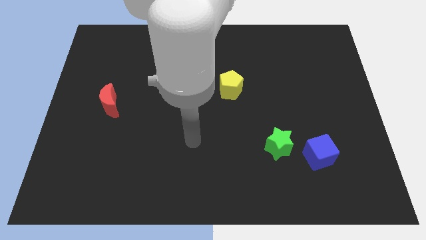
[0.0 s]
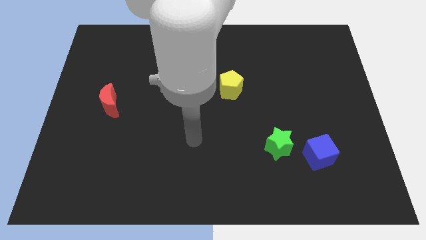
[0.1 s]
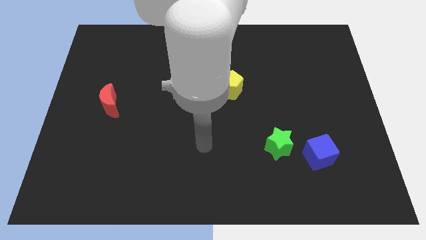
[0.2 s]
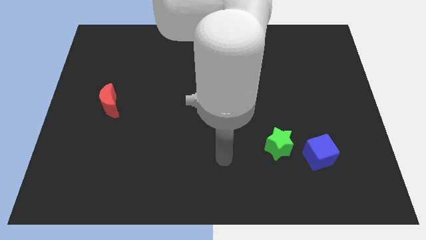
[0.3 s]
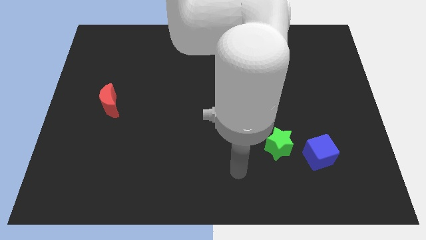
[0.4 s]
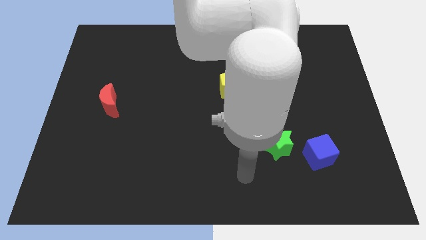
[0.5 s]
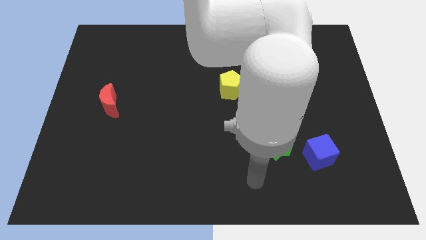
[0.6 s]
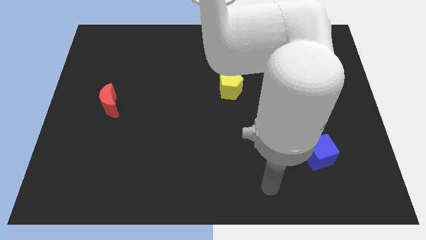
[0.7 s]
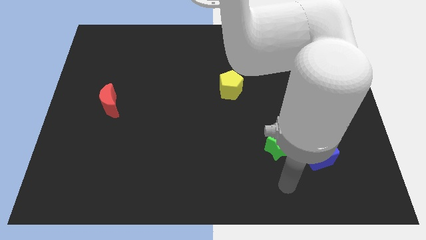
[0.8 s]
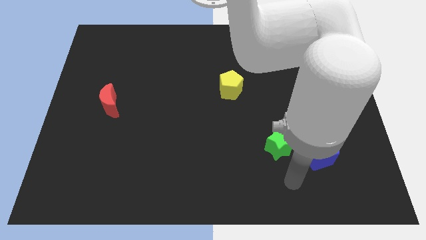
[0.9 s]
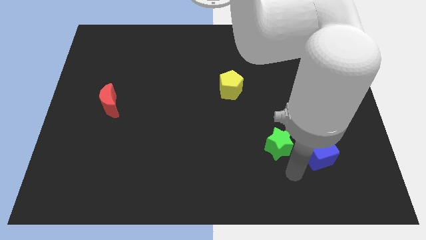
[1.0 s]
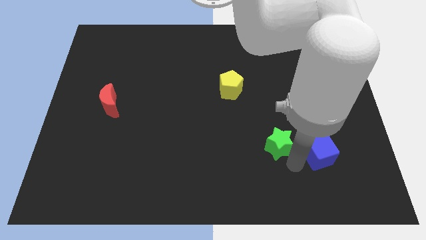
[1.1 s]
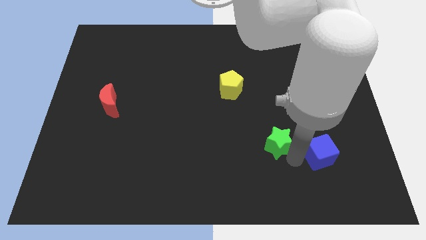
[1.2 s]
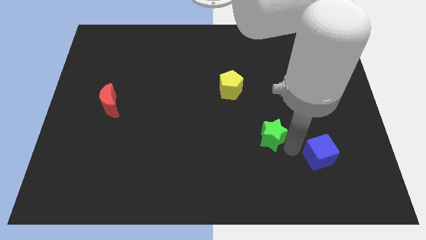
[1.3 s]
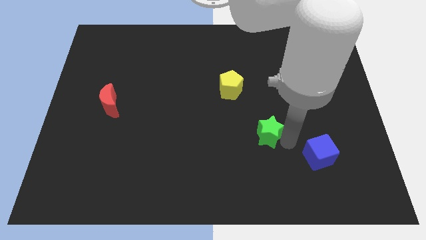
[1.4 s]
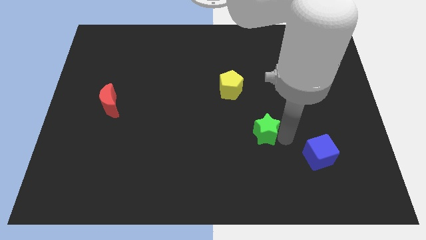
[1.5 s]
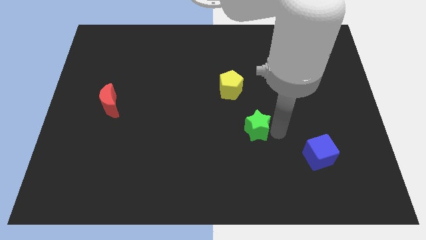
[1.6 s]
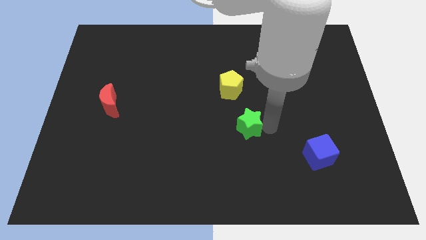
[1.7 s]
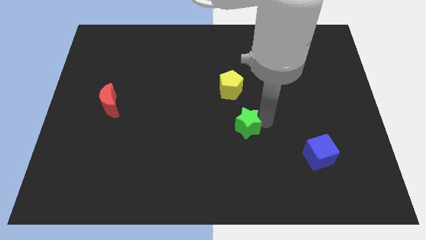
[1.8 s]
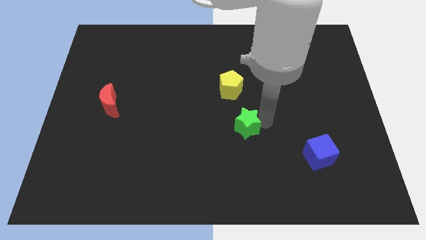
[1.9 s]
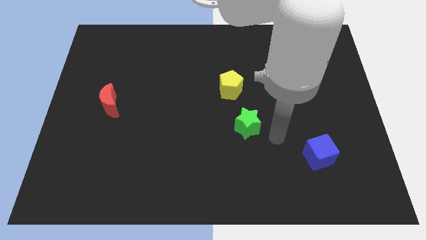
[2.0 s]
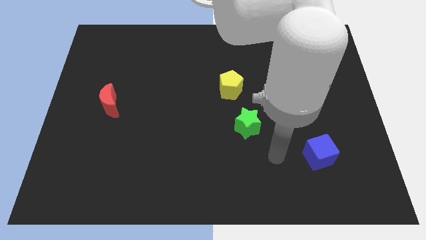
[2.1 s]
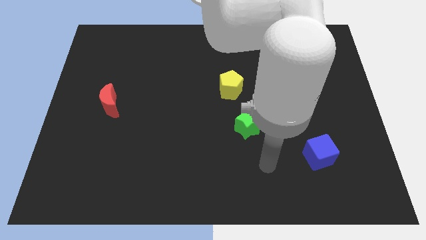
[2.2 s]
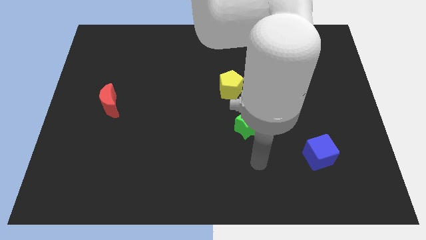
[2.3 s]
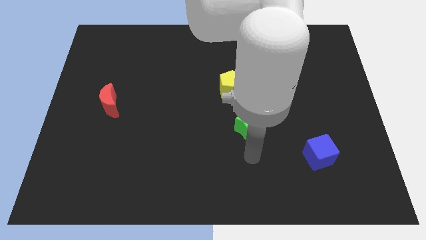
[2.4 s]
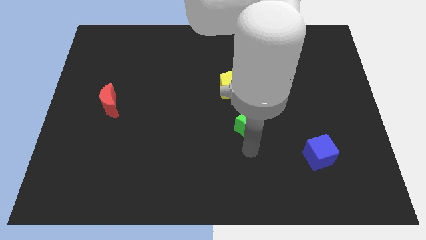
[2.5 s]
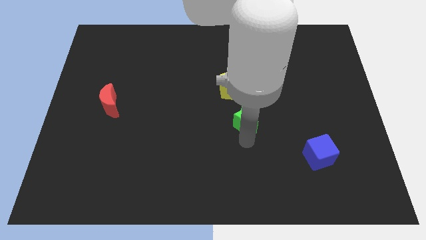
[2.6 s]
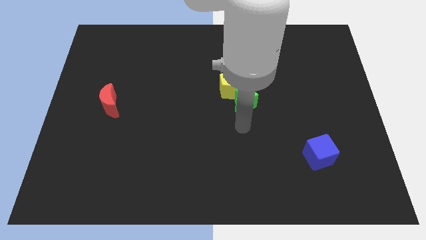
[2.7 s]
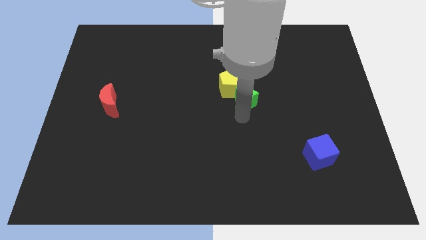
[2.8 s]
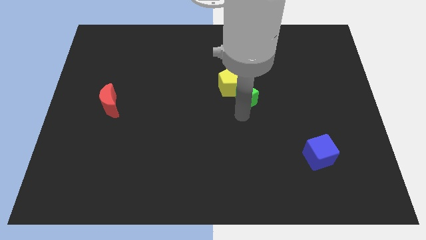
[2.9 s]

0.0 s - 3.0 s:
push the green star close to the pentagon

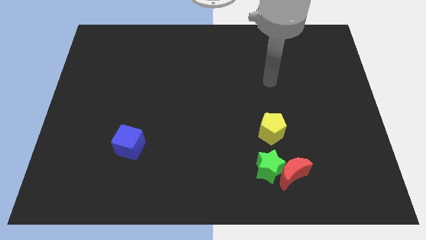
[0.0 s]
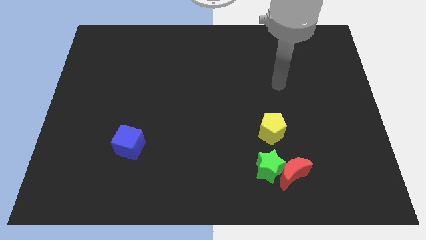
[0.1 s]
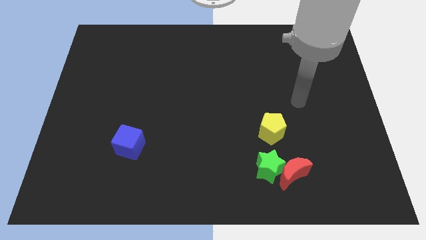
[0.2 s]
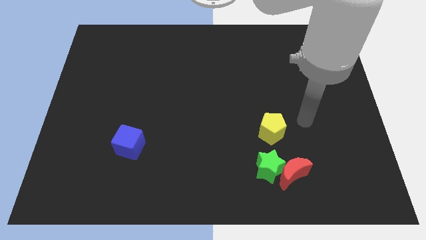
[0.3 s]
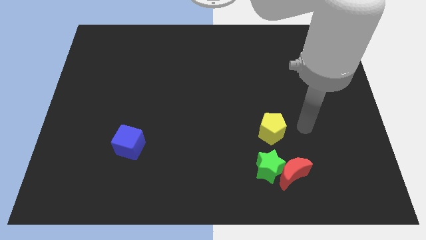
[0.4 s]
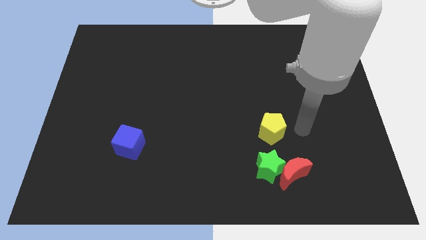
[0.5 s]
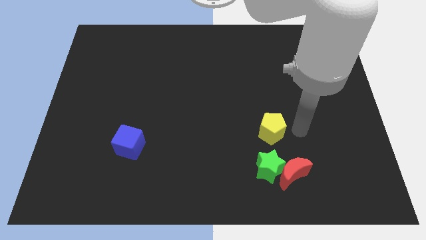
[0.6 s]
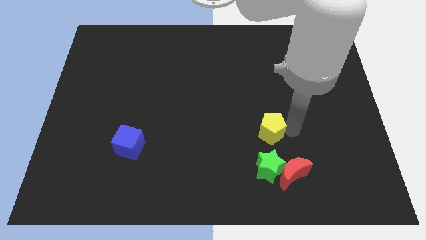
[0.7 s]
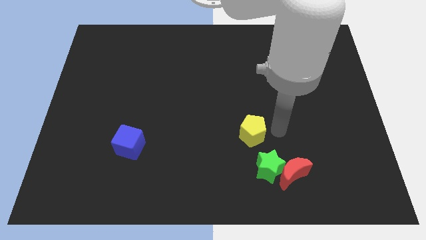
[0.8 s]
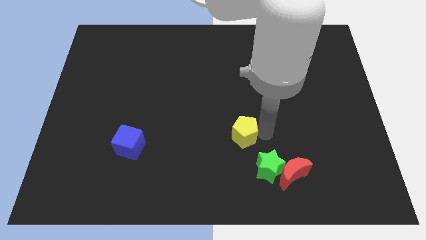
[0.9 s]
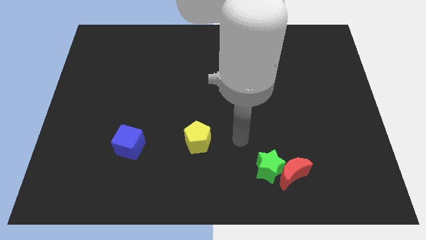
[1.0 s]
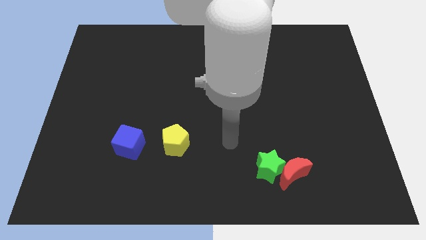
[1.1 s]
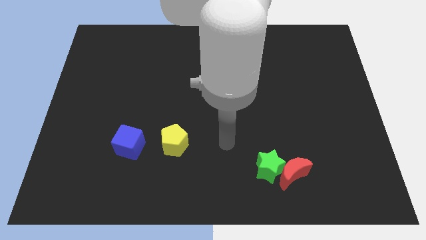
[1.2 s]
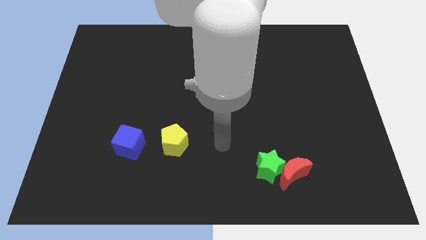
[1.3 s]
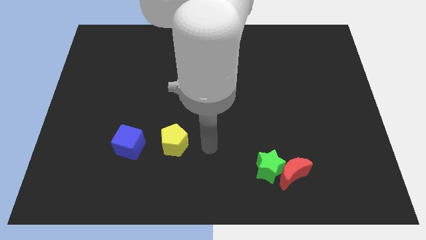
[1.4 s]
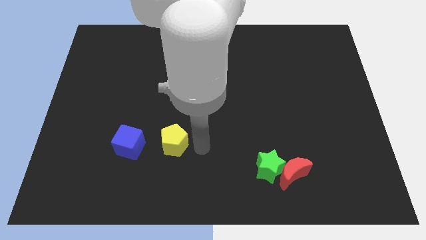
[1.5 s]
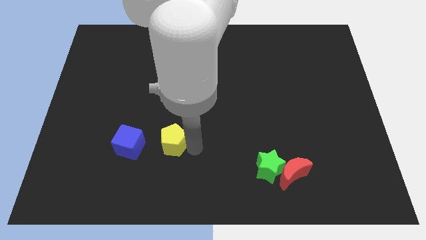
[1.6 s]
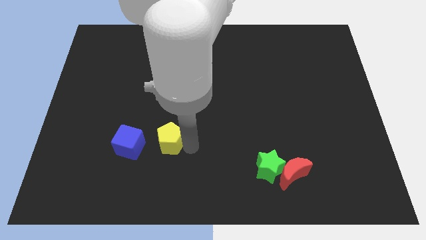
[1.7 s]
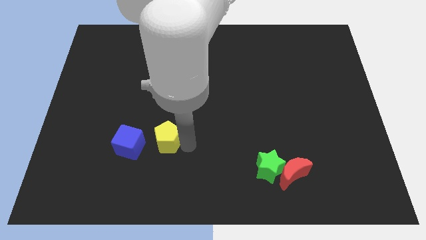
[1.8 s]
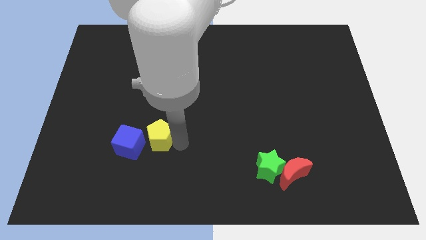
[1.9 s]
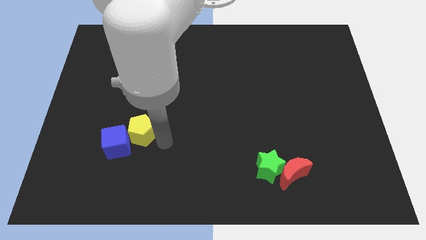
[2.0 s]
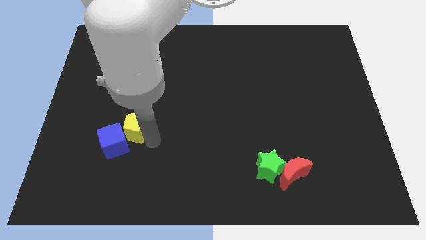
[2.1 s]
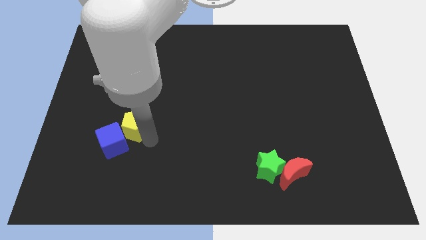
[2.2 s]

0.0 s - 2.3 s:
push the pentagon close to the blue block

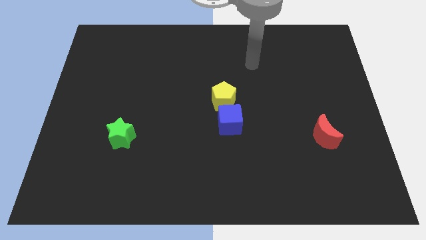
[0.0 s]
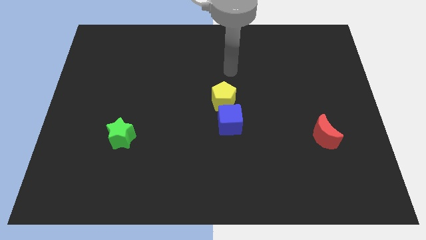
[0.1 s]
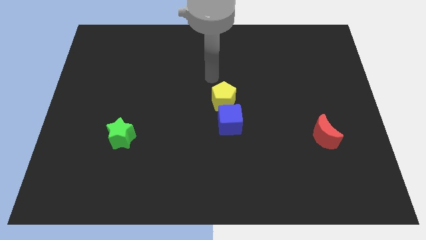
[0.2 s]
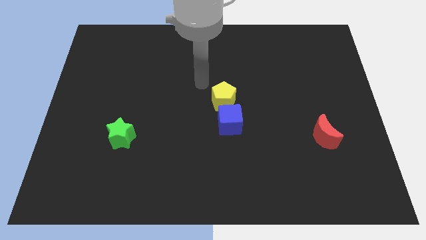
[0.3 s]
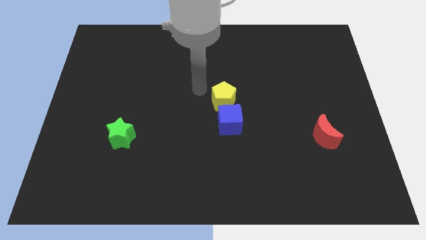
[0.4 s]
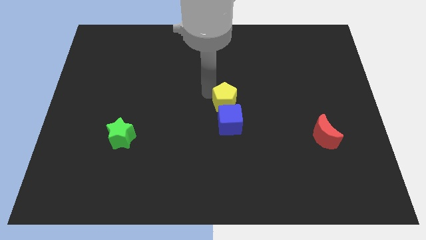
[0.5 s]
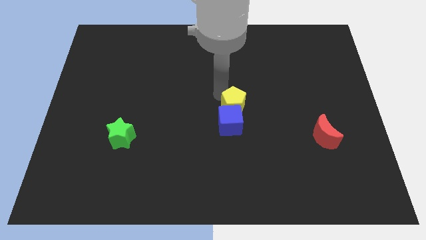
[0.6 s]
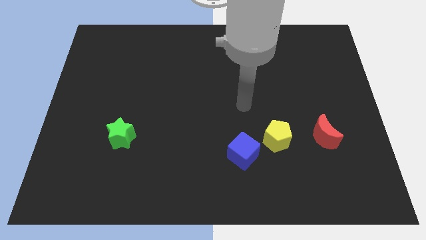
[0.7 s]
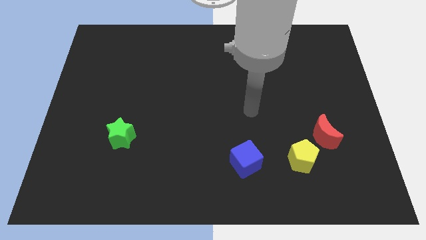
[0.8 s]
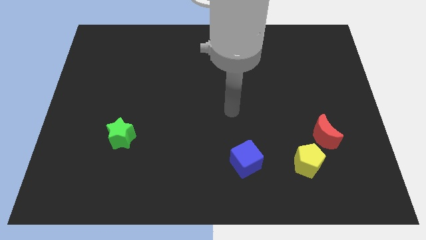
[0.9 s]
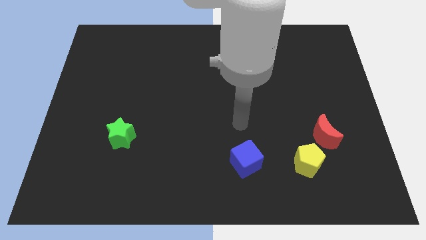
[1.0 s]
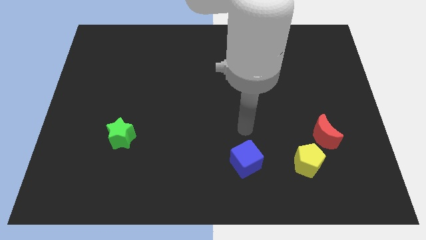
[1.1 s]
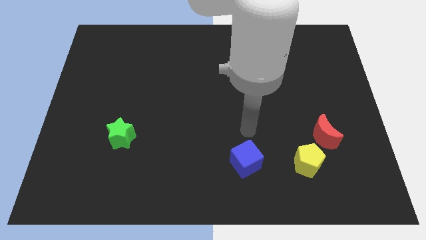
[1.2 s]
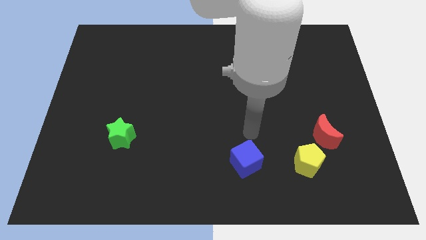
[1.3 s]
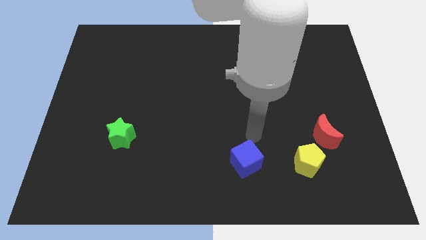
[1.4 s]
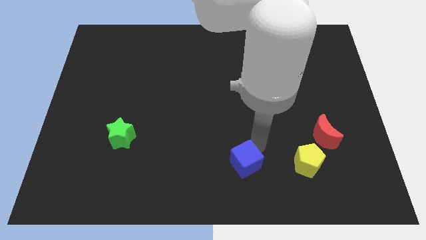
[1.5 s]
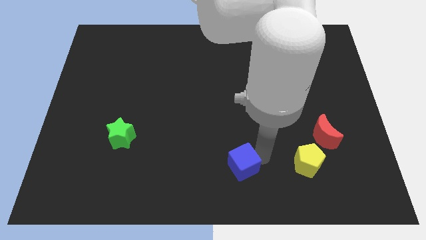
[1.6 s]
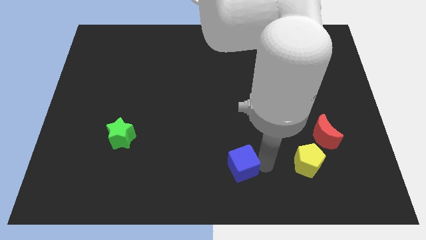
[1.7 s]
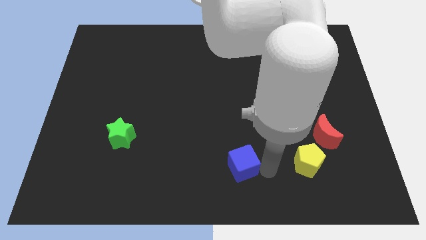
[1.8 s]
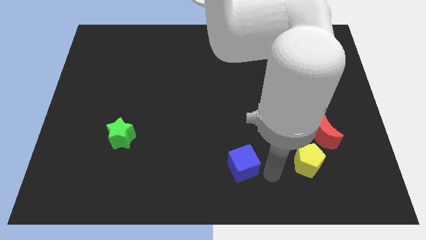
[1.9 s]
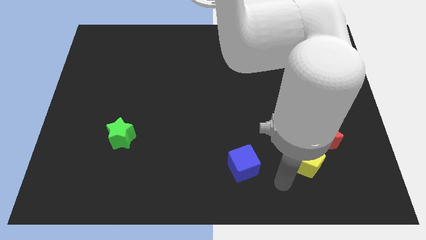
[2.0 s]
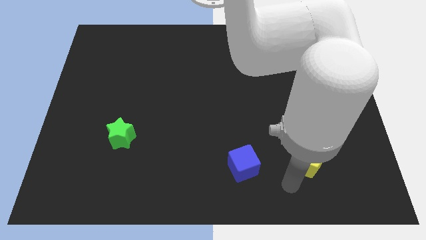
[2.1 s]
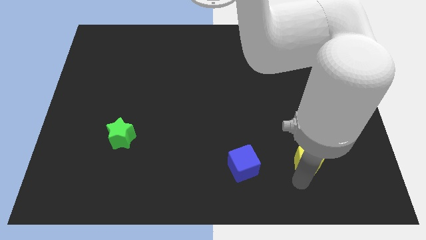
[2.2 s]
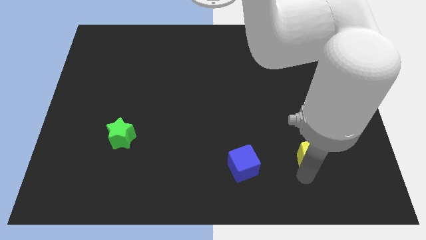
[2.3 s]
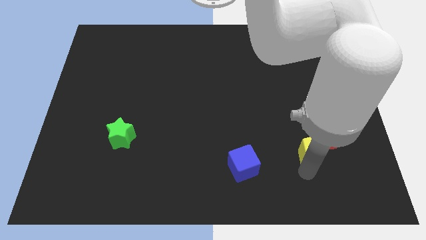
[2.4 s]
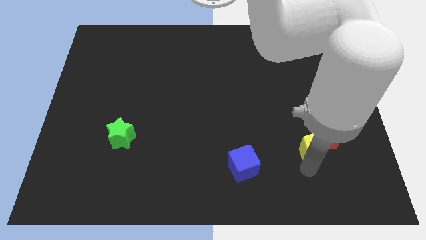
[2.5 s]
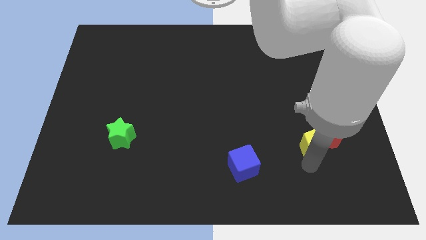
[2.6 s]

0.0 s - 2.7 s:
put the pentagon towards the red moon
